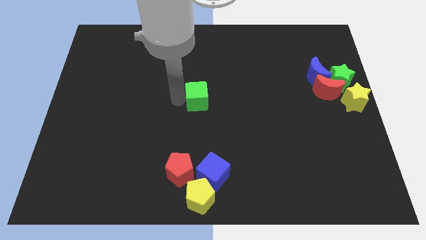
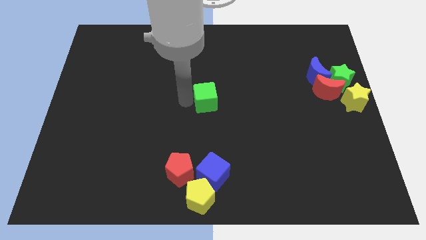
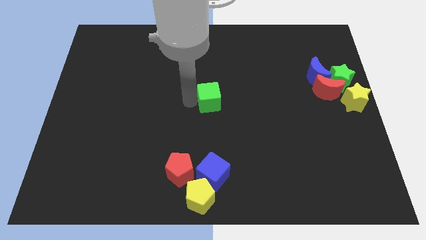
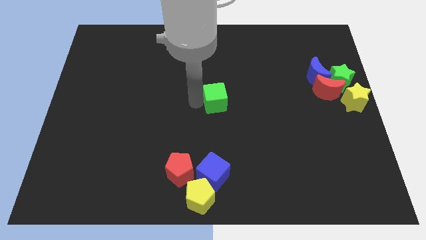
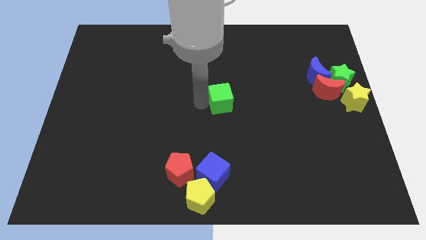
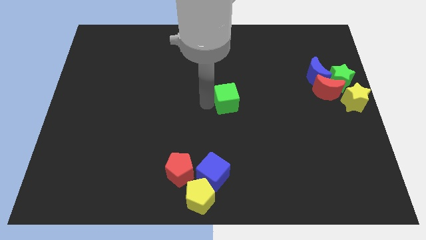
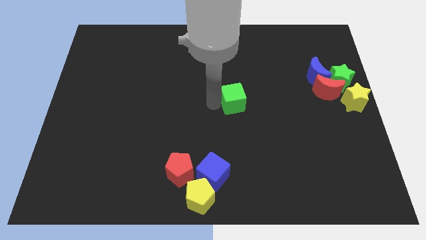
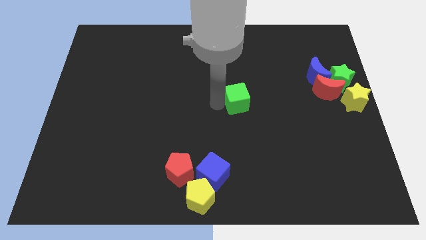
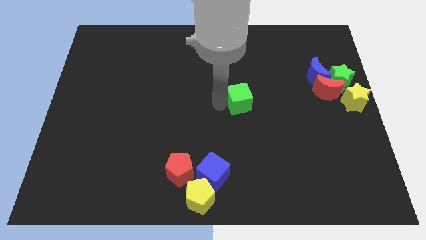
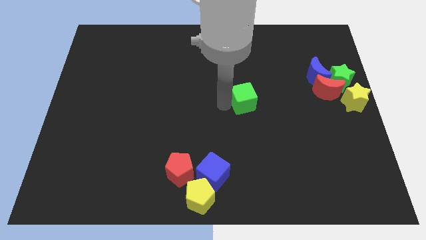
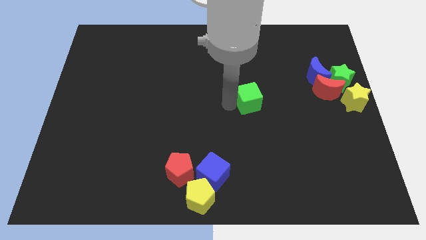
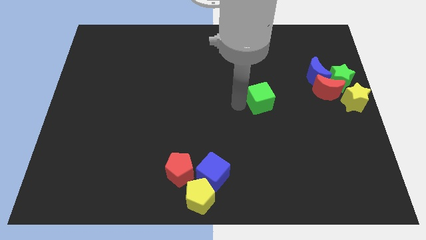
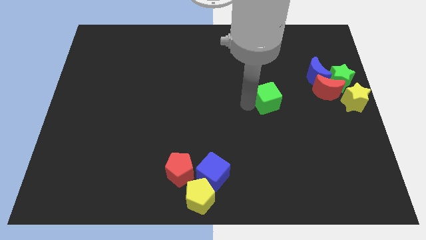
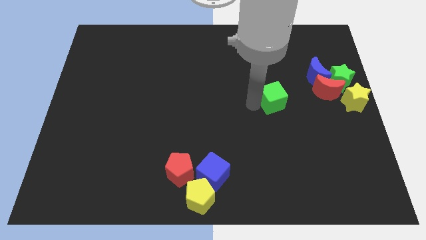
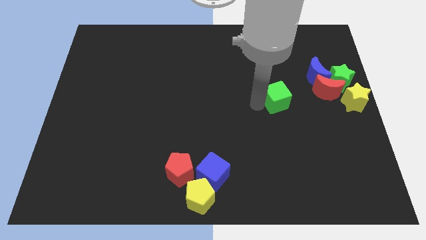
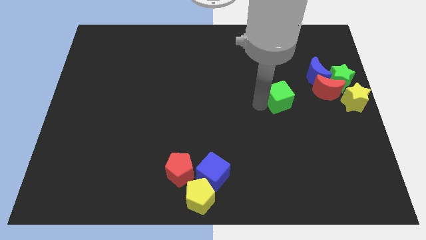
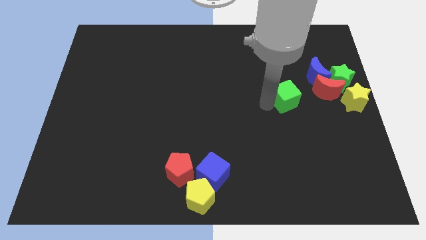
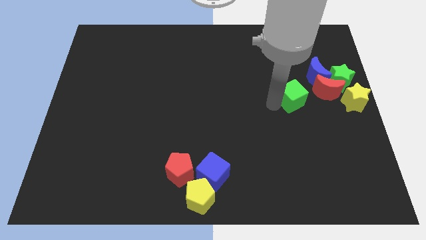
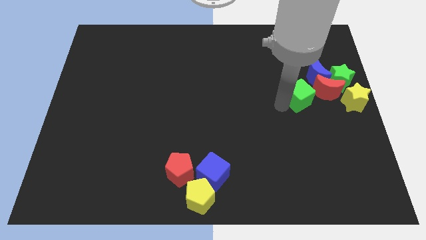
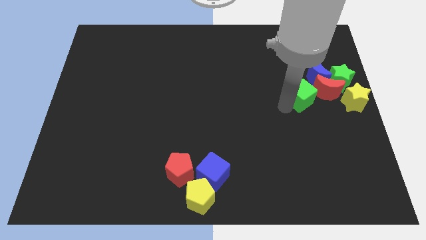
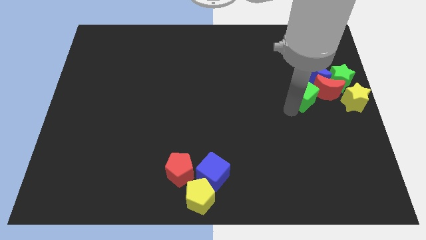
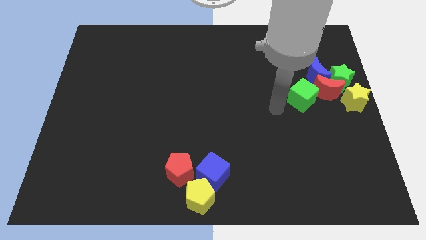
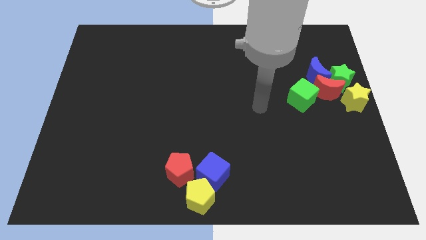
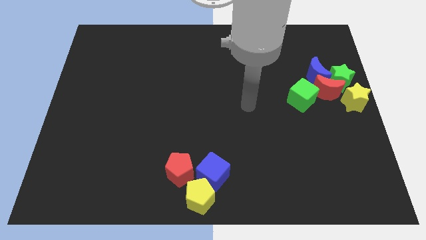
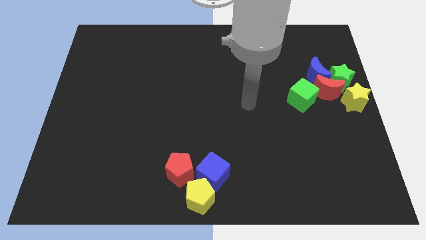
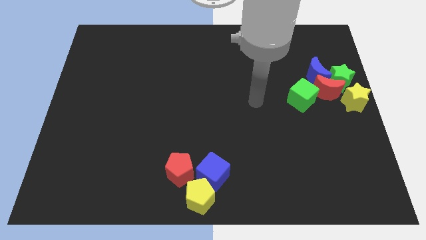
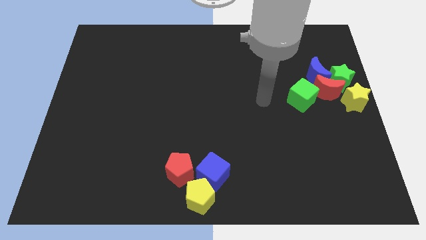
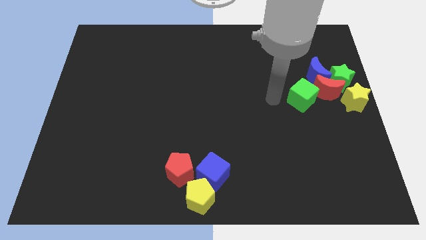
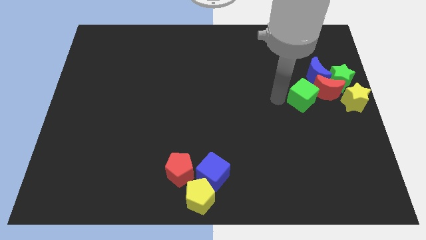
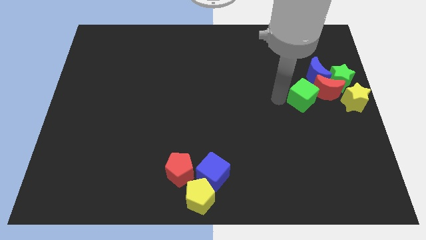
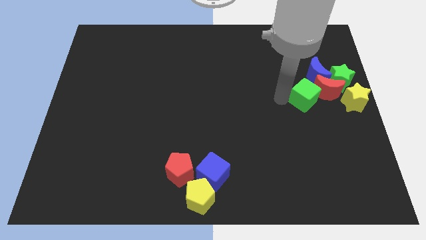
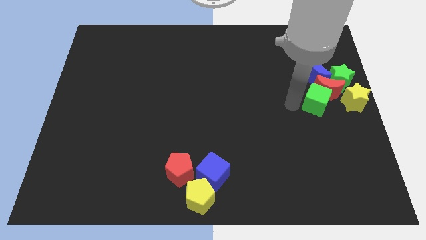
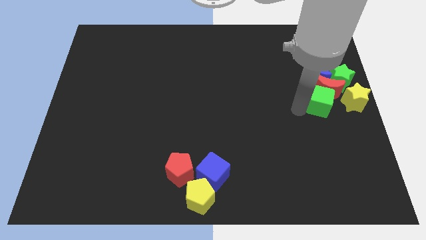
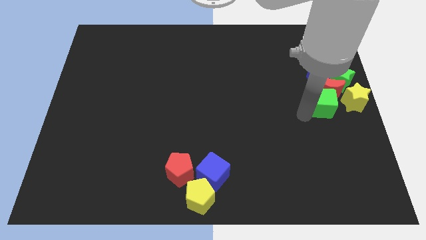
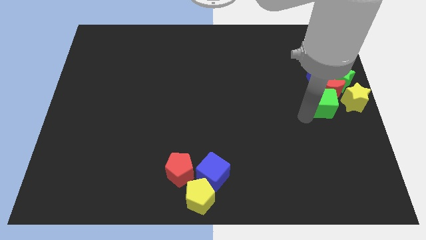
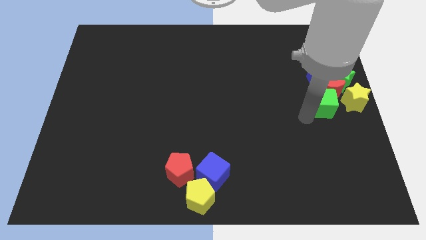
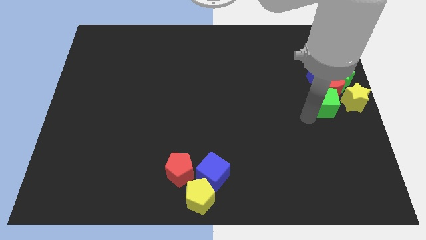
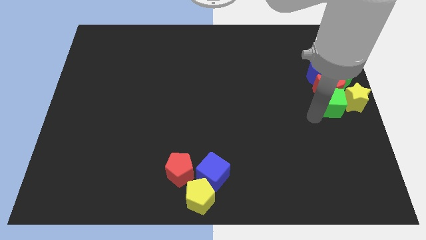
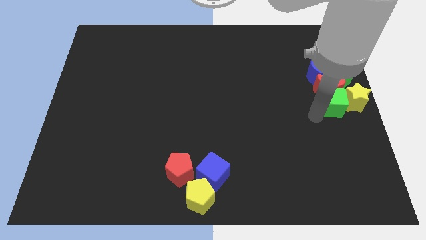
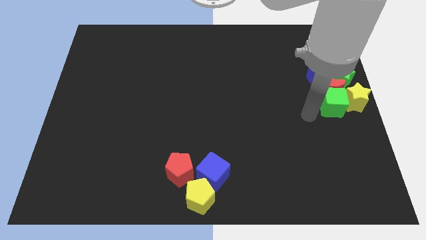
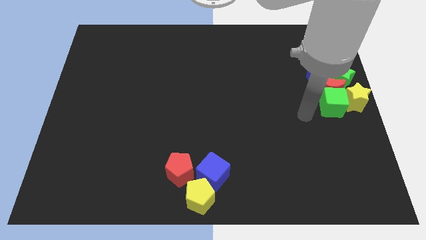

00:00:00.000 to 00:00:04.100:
place the green cube below the red crescent

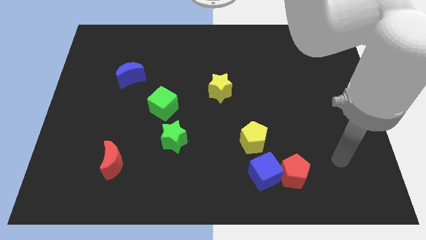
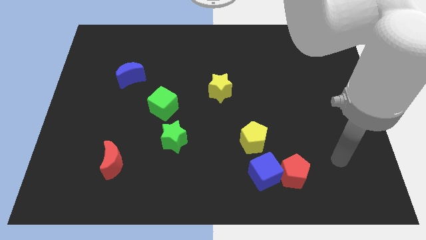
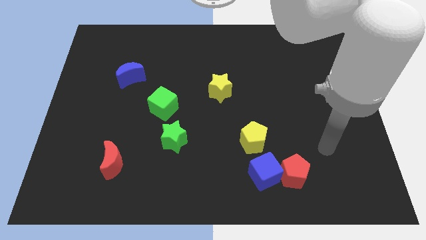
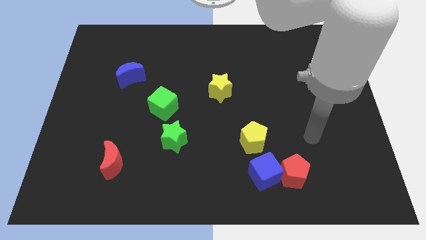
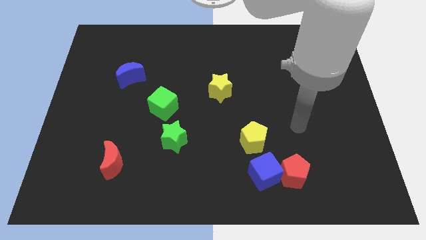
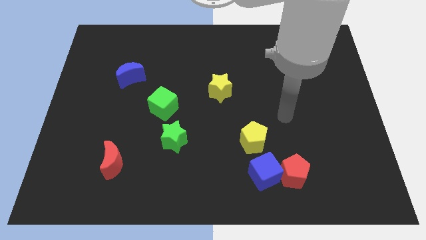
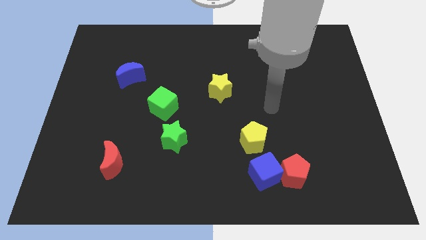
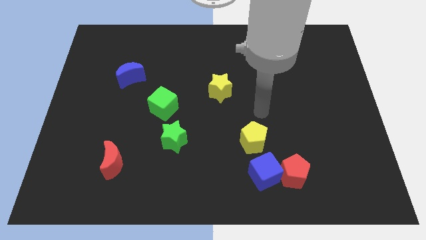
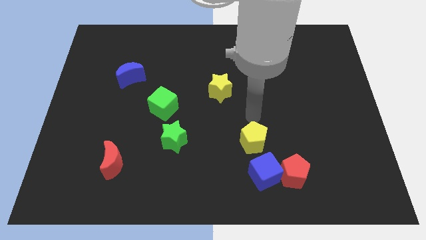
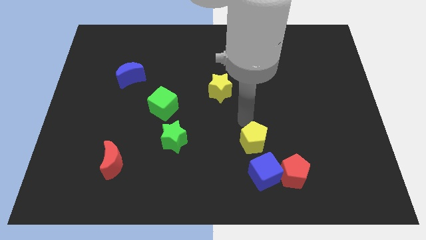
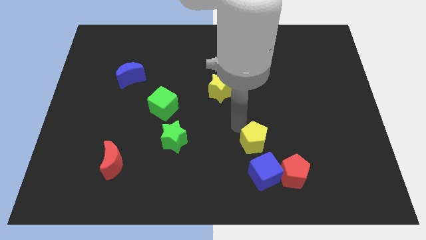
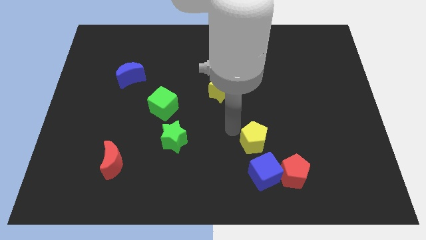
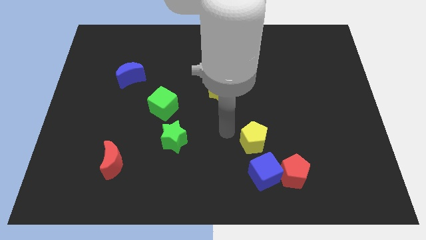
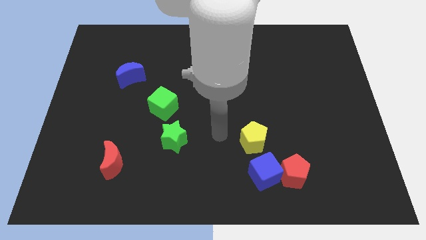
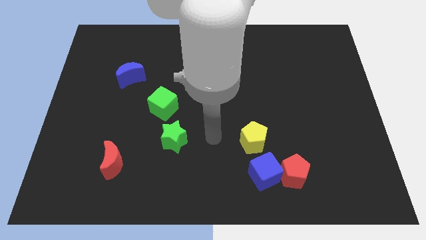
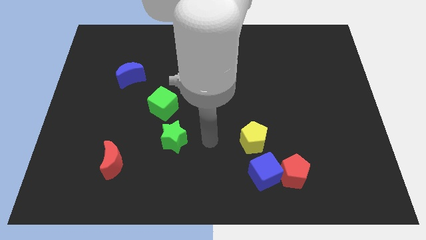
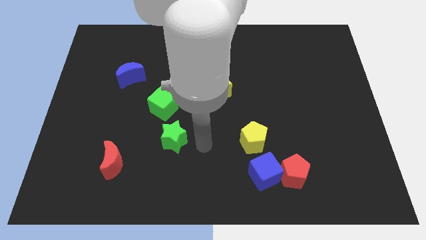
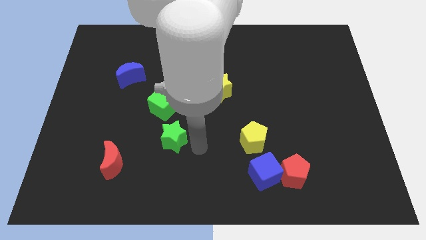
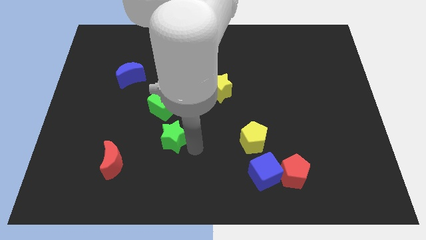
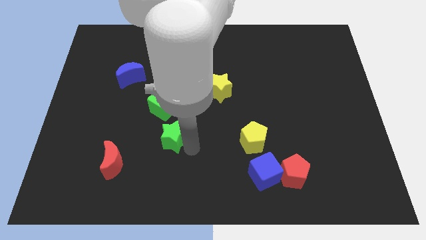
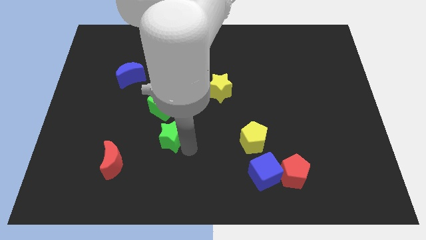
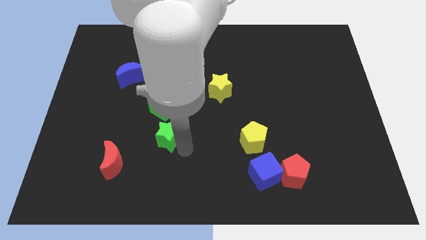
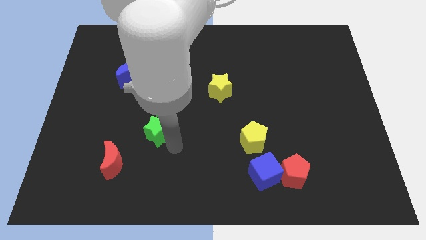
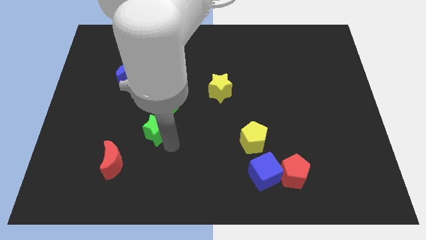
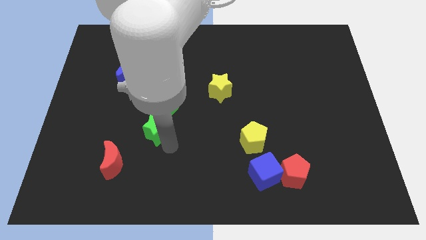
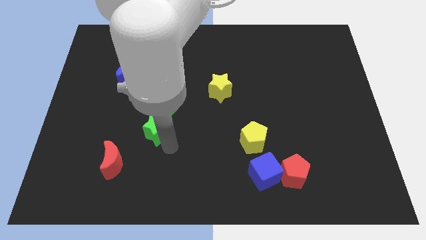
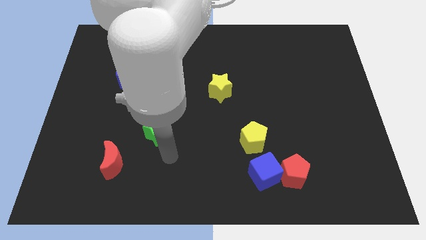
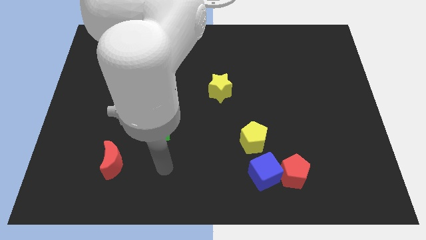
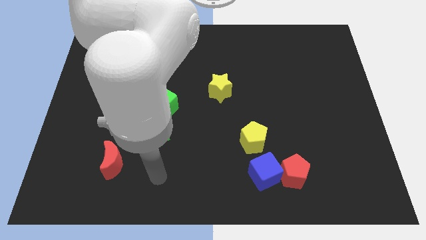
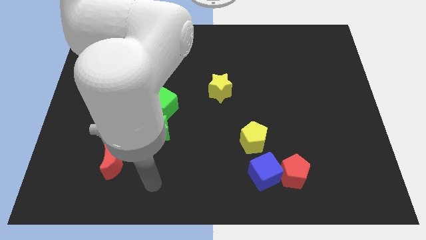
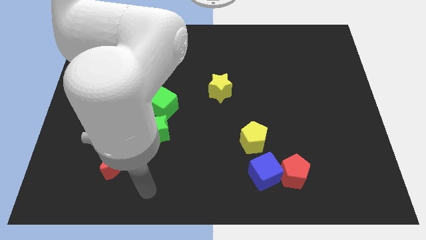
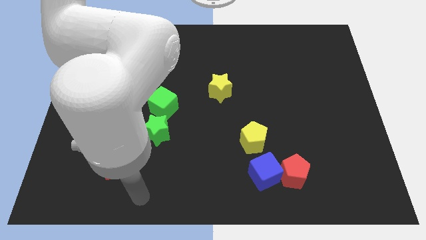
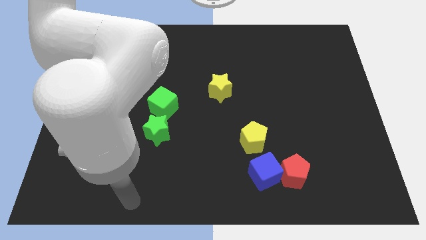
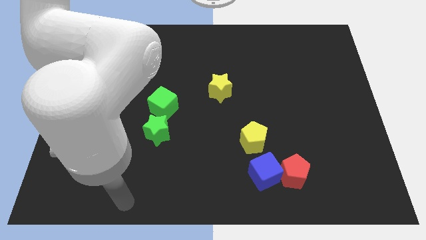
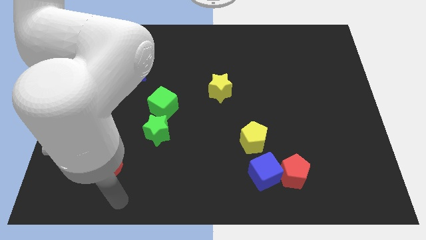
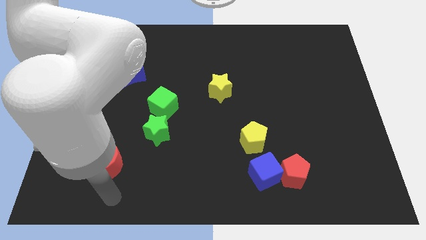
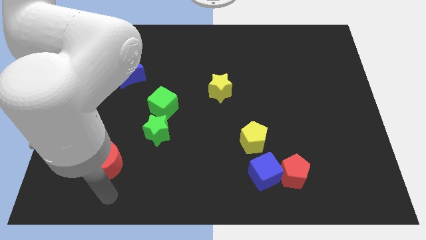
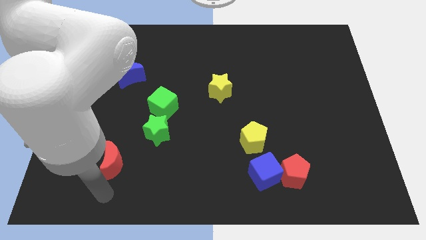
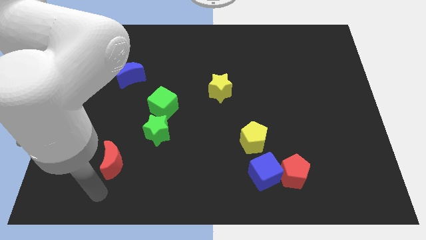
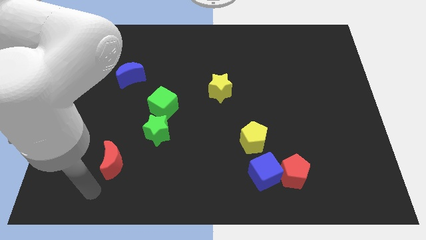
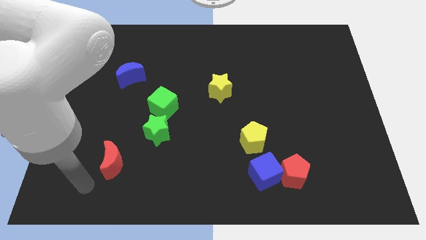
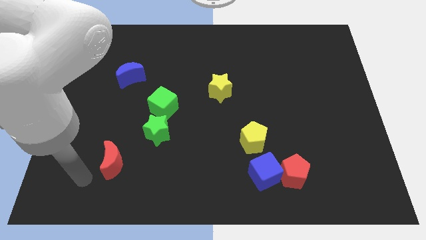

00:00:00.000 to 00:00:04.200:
push the green star into the green cube

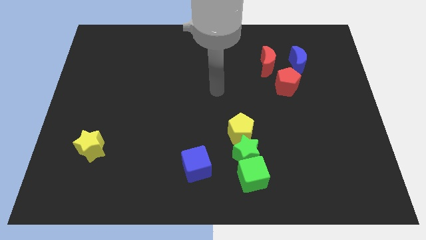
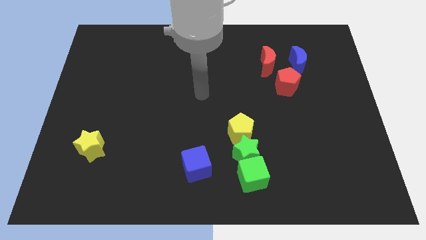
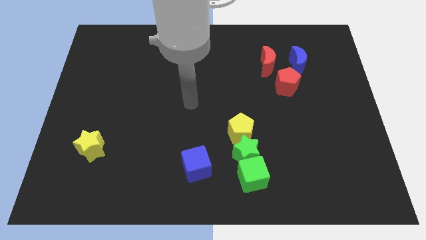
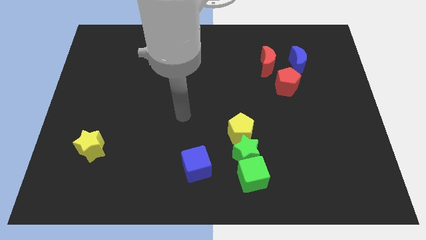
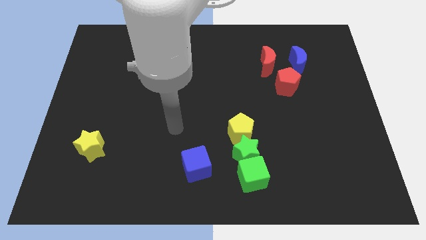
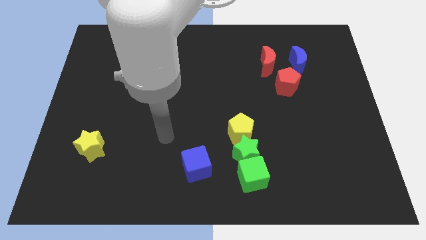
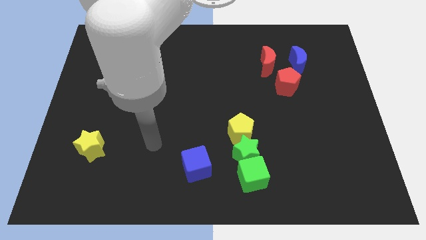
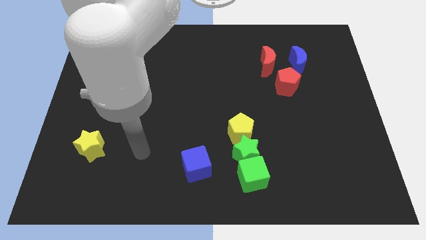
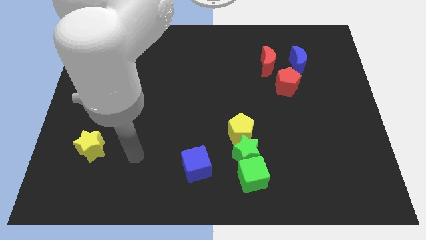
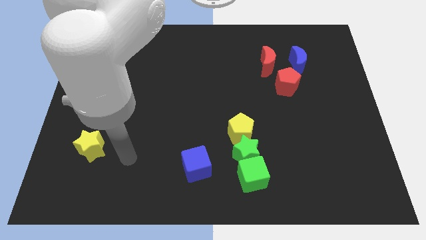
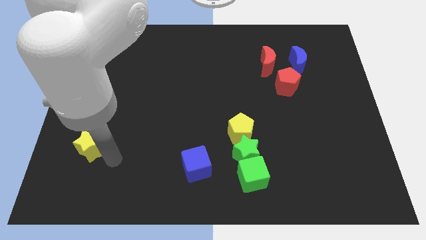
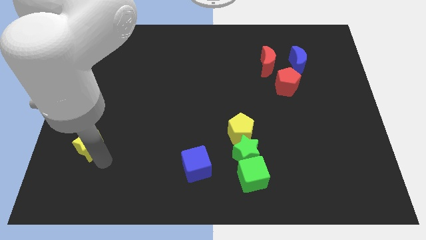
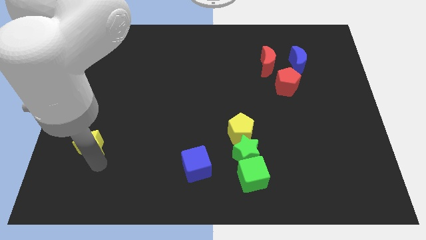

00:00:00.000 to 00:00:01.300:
place your arm to the bottom of the yellow star
